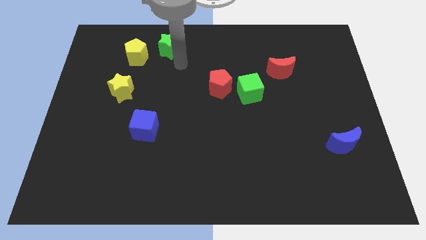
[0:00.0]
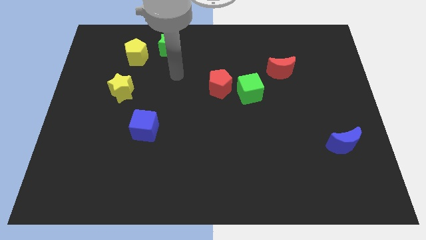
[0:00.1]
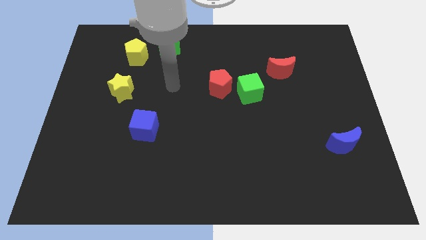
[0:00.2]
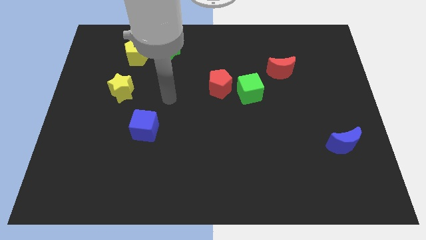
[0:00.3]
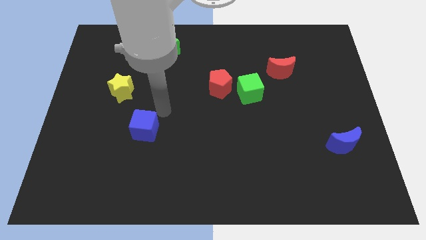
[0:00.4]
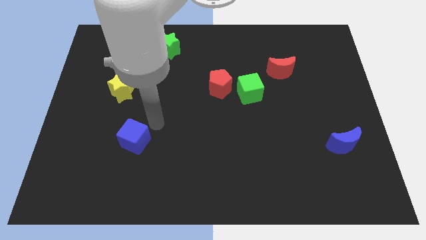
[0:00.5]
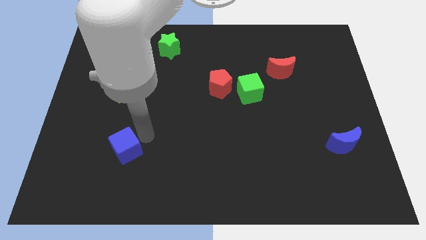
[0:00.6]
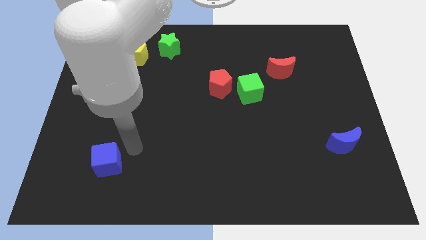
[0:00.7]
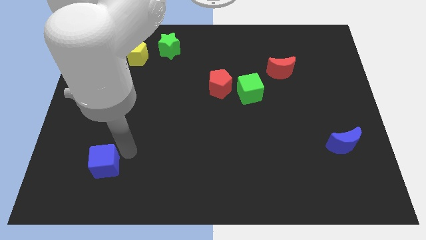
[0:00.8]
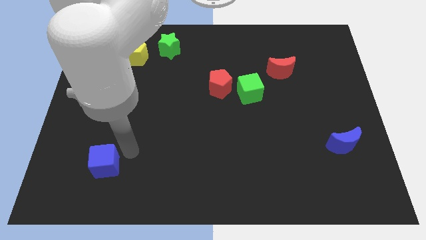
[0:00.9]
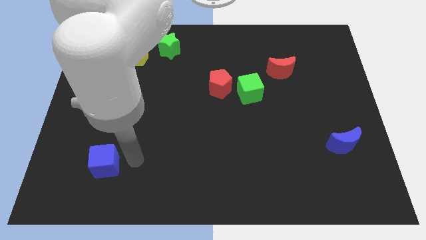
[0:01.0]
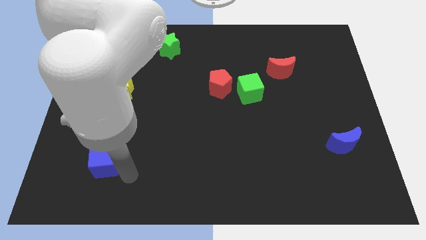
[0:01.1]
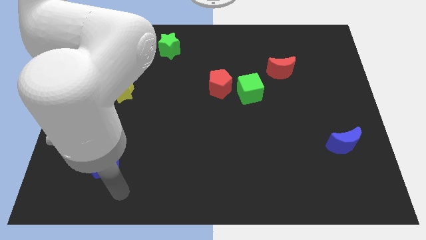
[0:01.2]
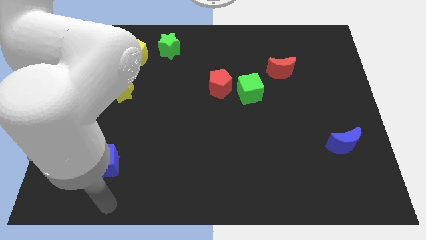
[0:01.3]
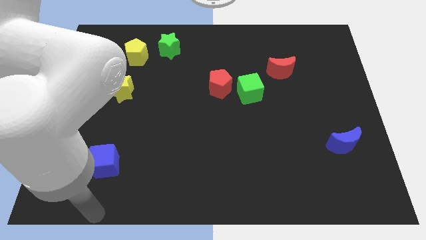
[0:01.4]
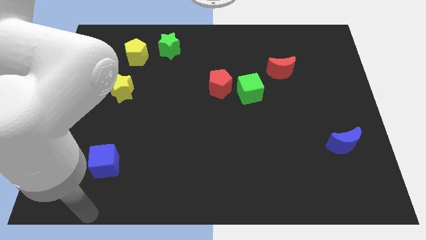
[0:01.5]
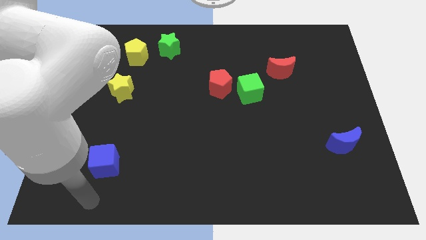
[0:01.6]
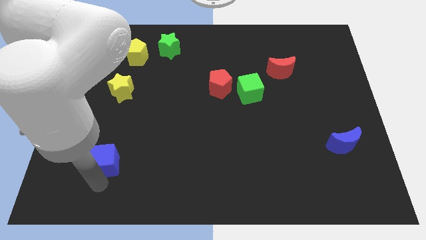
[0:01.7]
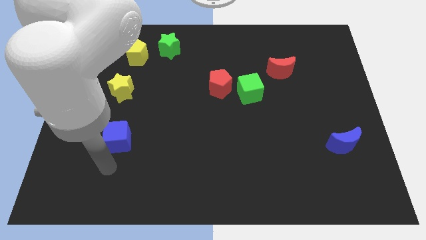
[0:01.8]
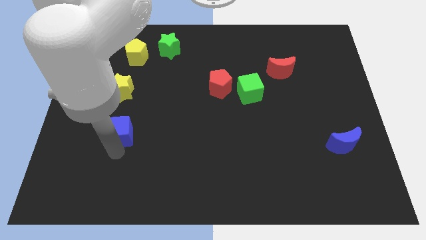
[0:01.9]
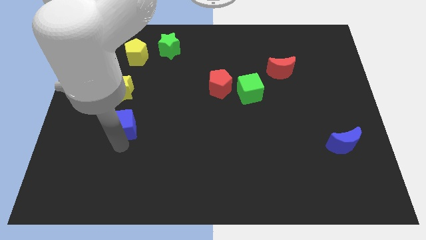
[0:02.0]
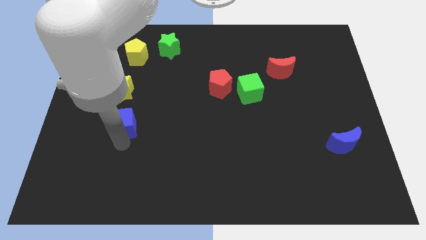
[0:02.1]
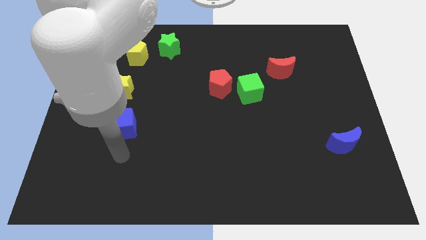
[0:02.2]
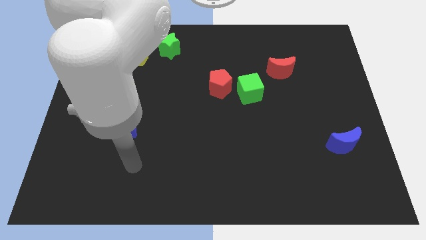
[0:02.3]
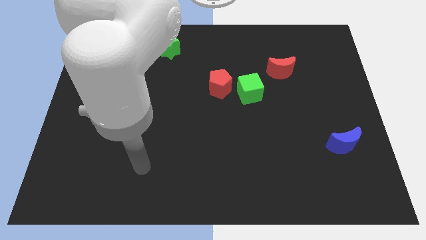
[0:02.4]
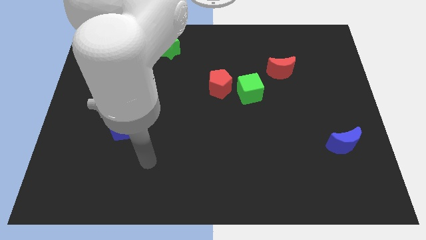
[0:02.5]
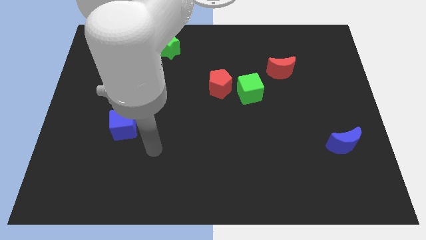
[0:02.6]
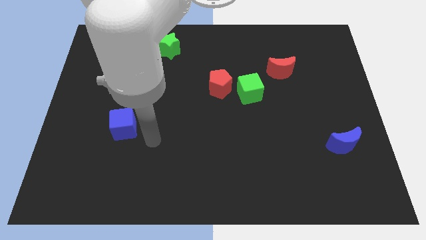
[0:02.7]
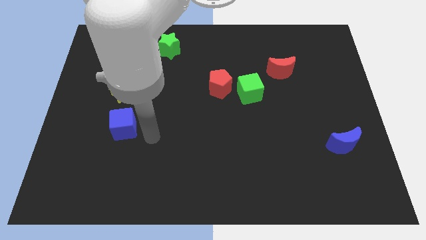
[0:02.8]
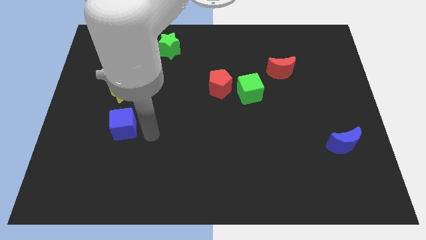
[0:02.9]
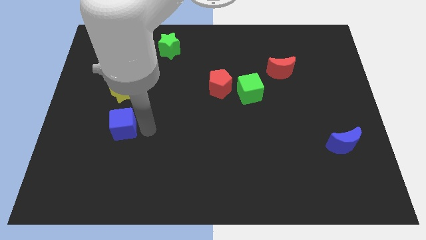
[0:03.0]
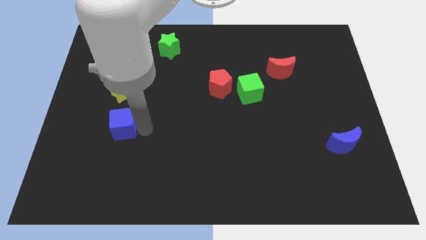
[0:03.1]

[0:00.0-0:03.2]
slightly push the blue cube towards the left of the board

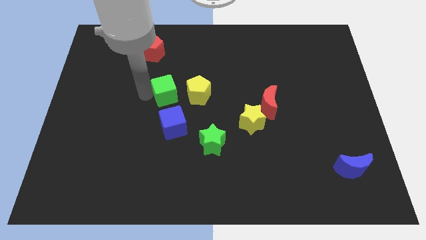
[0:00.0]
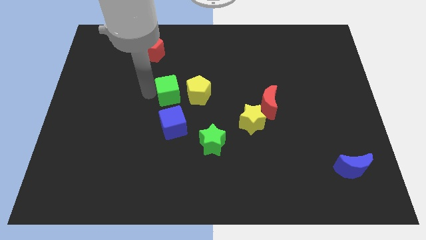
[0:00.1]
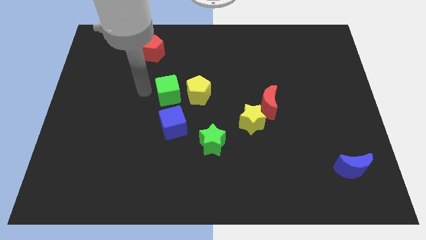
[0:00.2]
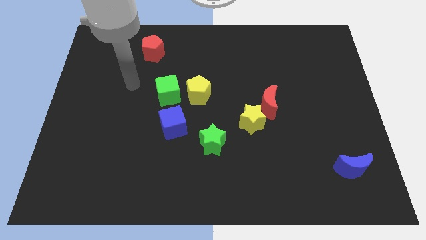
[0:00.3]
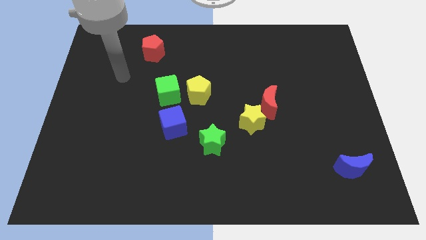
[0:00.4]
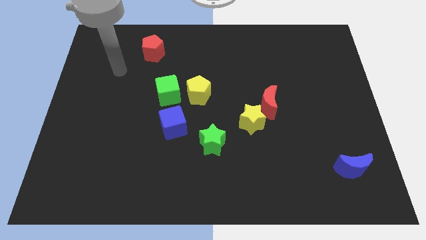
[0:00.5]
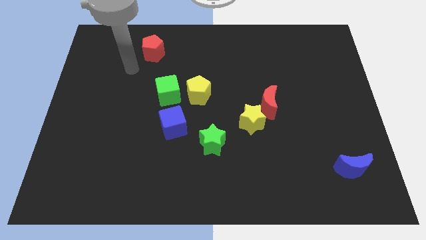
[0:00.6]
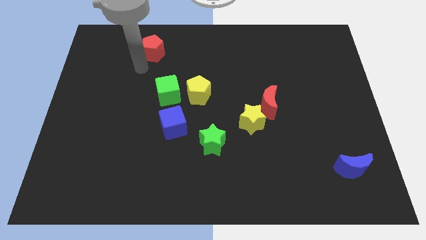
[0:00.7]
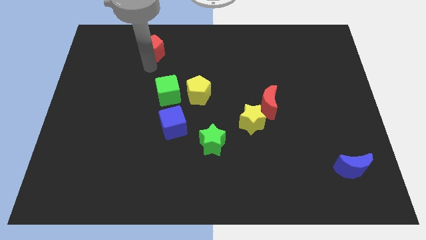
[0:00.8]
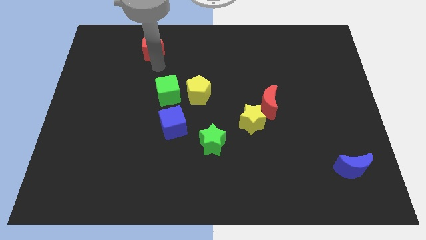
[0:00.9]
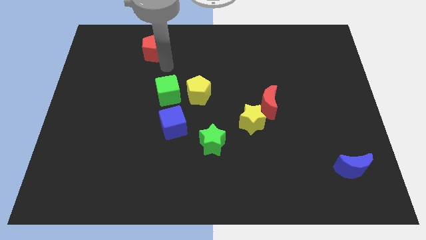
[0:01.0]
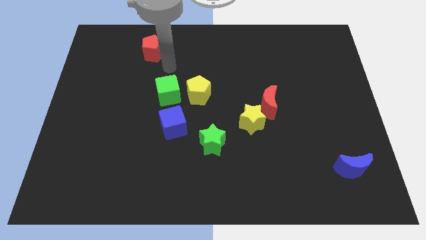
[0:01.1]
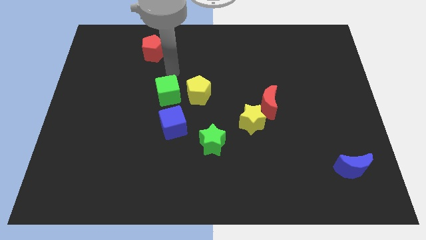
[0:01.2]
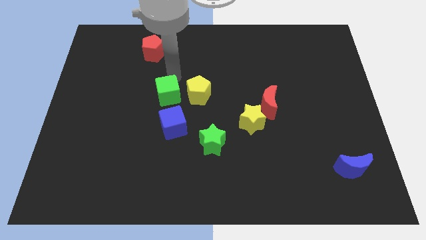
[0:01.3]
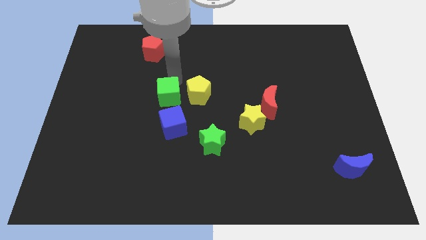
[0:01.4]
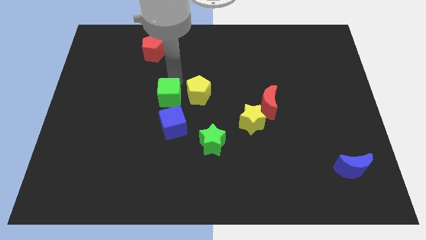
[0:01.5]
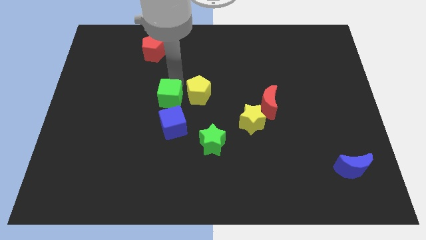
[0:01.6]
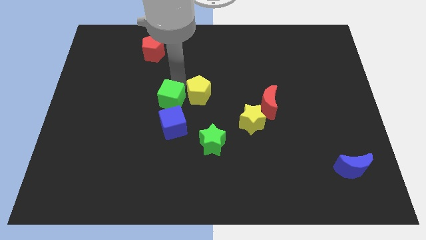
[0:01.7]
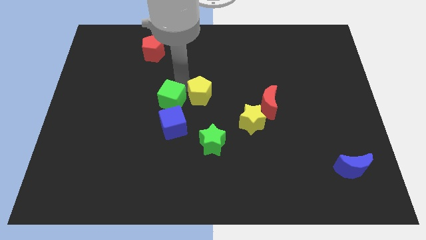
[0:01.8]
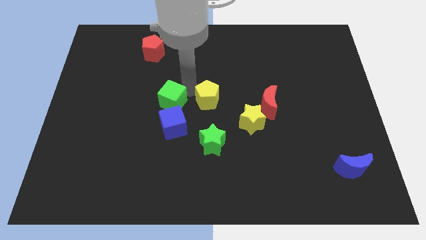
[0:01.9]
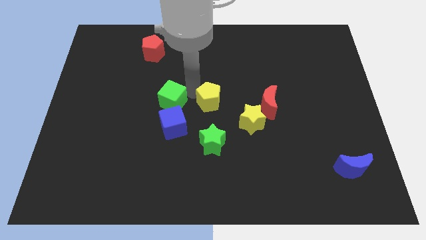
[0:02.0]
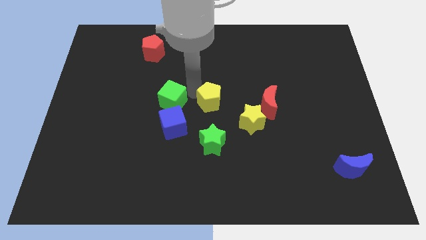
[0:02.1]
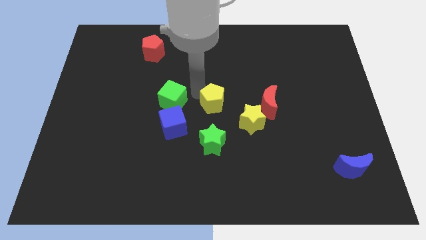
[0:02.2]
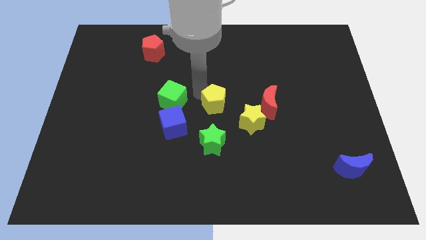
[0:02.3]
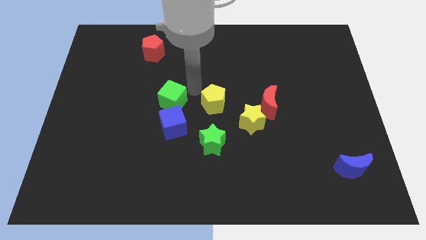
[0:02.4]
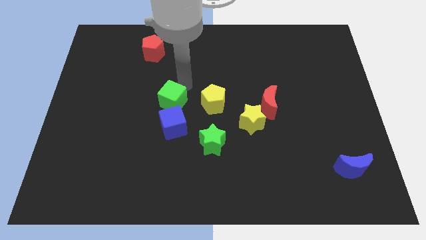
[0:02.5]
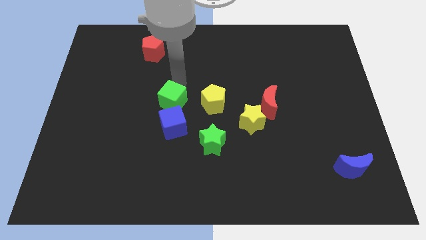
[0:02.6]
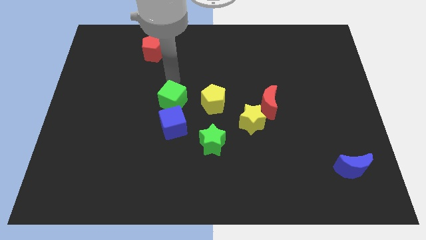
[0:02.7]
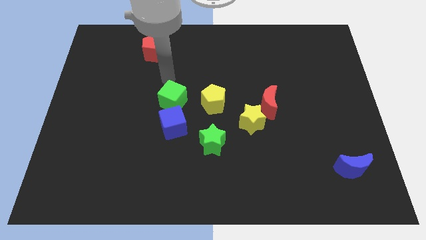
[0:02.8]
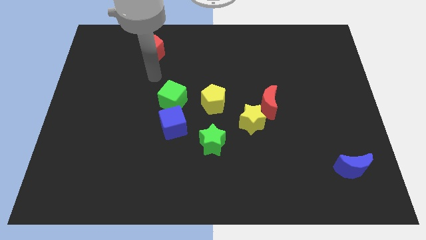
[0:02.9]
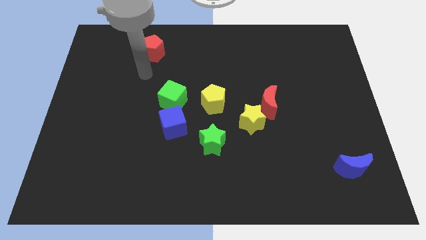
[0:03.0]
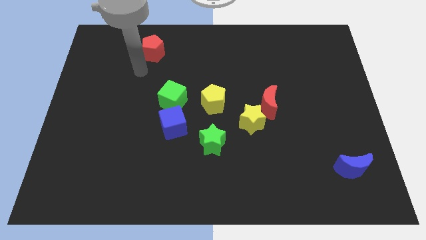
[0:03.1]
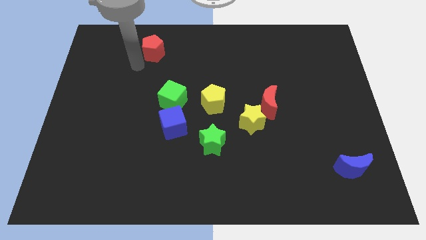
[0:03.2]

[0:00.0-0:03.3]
slightly move down the yellow pentagon

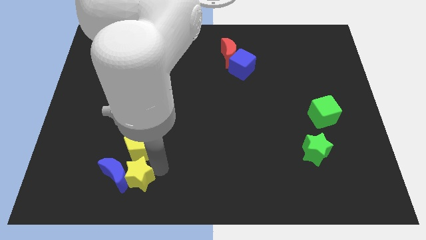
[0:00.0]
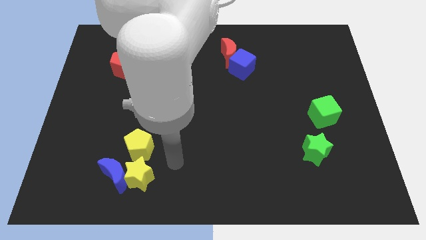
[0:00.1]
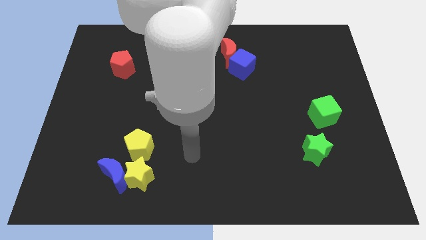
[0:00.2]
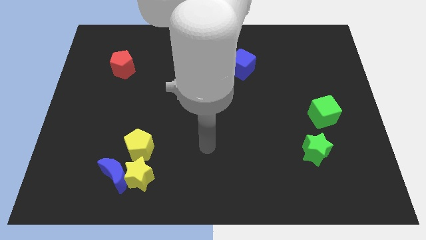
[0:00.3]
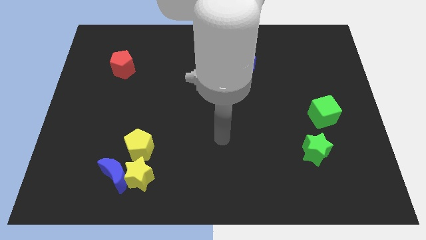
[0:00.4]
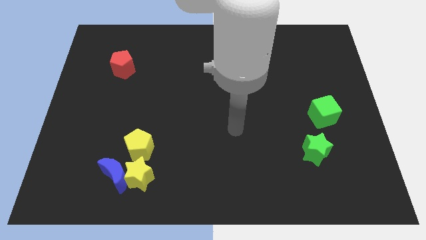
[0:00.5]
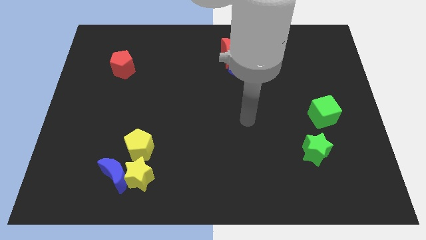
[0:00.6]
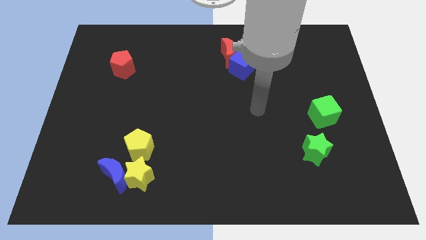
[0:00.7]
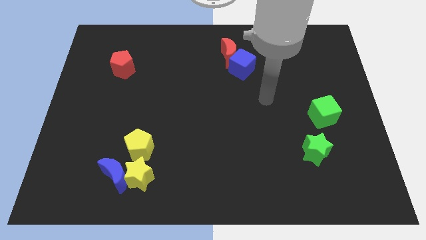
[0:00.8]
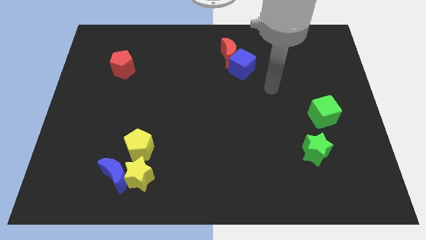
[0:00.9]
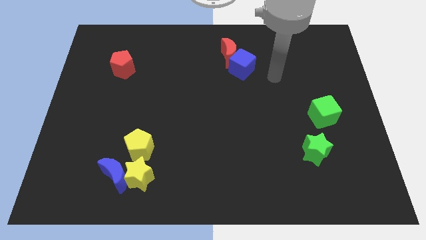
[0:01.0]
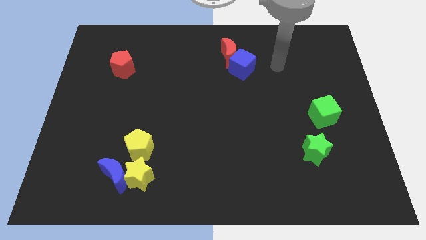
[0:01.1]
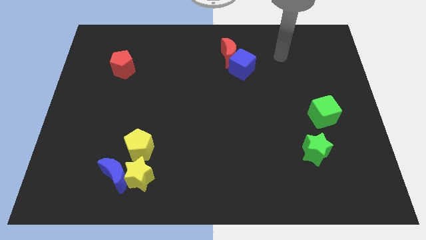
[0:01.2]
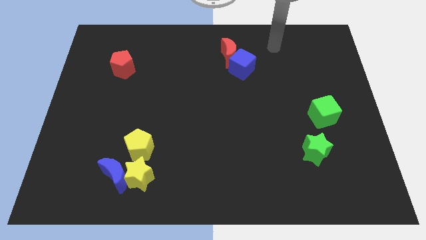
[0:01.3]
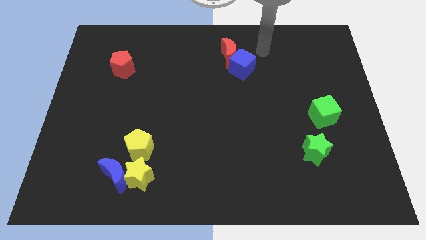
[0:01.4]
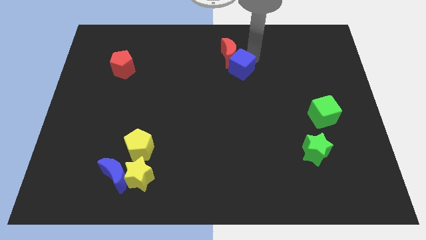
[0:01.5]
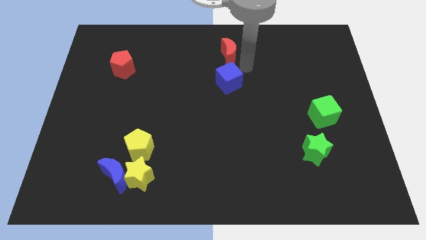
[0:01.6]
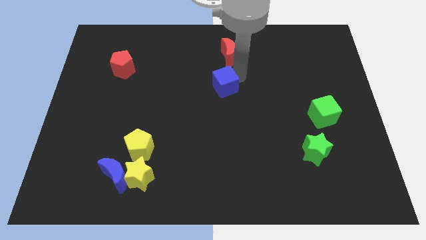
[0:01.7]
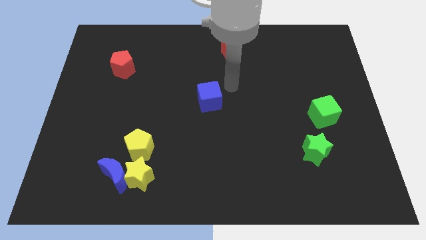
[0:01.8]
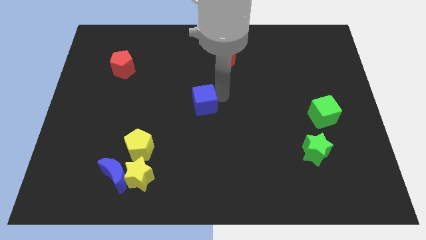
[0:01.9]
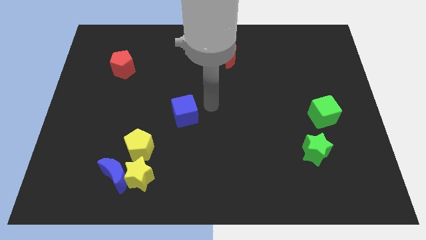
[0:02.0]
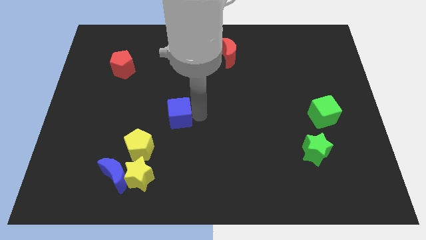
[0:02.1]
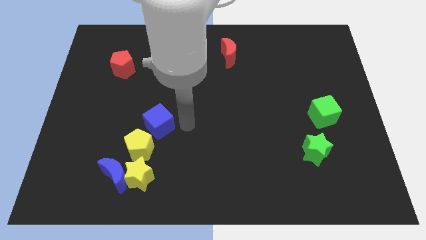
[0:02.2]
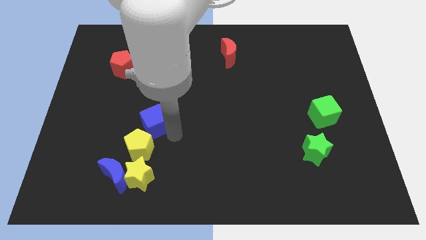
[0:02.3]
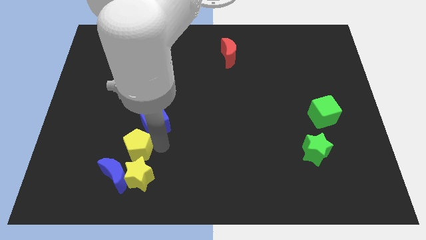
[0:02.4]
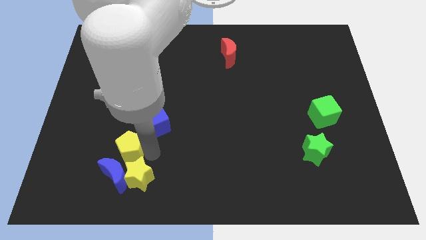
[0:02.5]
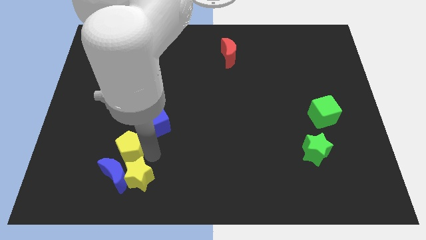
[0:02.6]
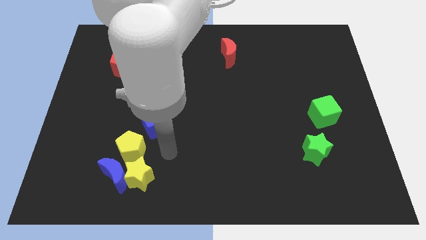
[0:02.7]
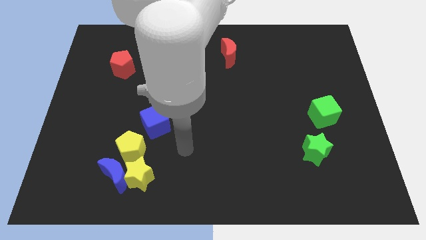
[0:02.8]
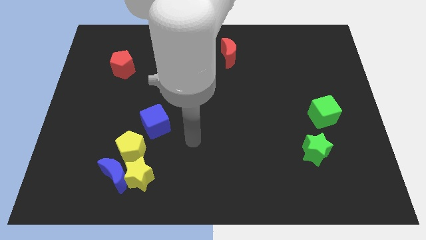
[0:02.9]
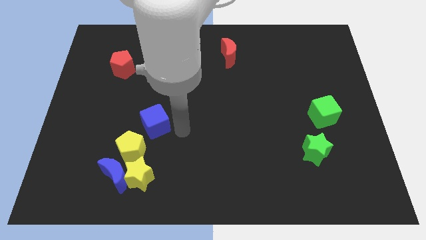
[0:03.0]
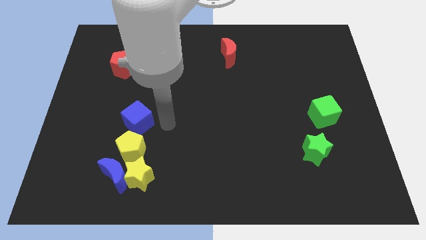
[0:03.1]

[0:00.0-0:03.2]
push the blue cube to the top of the yellow pentagon
